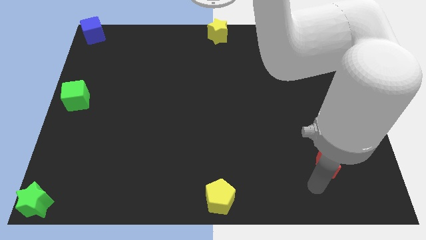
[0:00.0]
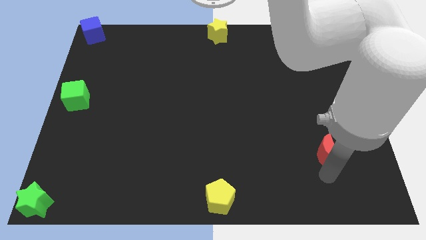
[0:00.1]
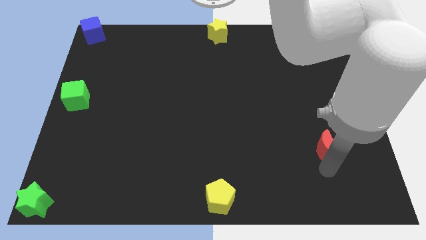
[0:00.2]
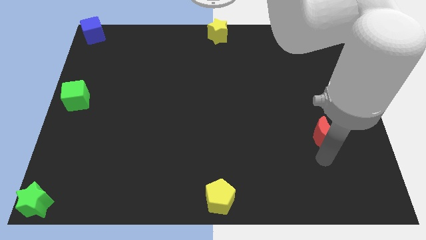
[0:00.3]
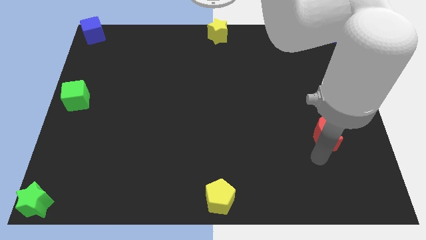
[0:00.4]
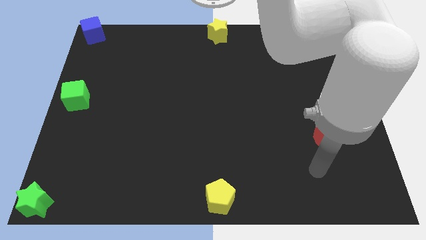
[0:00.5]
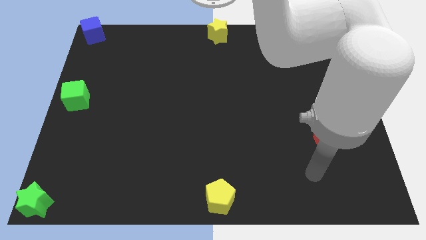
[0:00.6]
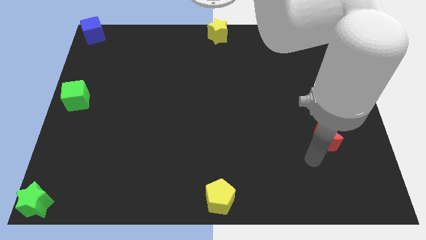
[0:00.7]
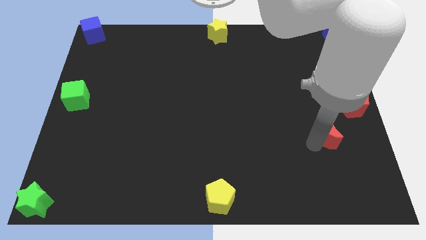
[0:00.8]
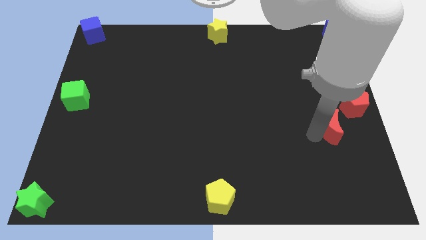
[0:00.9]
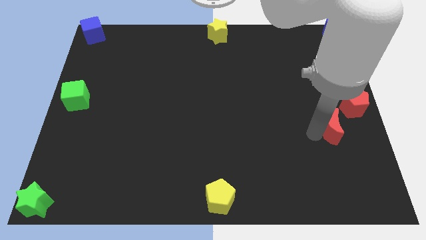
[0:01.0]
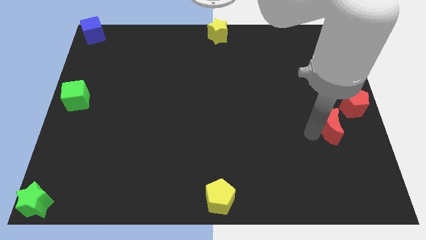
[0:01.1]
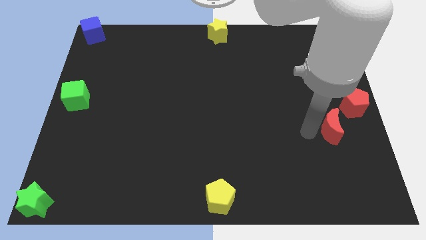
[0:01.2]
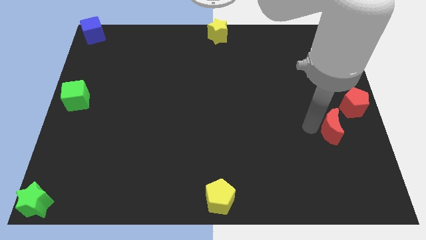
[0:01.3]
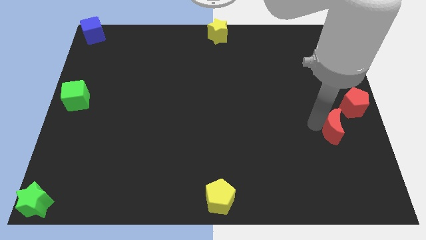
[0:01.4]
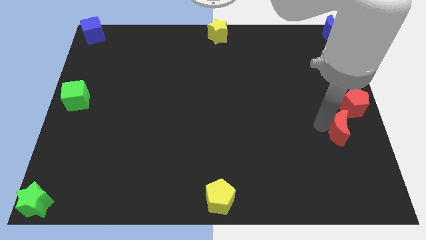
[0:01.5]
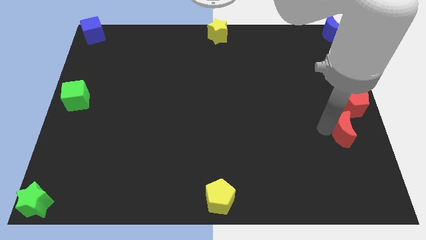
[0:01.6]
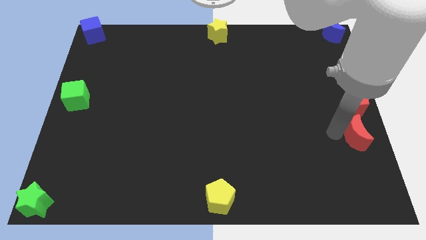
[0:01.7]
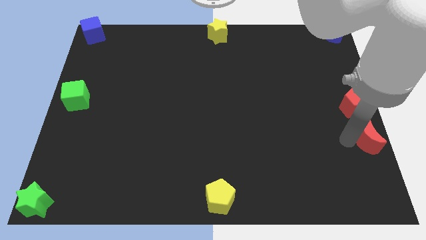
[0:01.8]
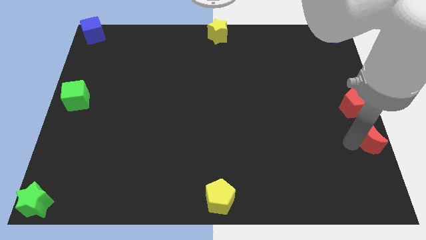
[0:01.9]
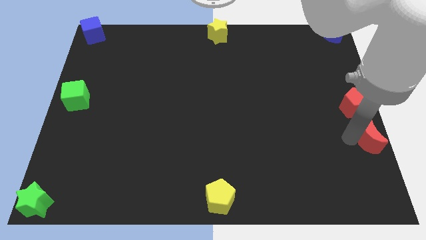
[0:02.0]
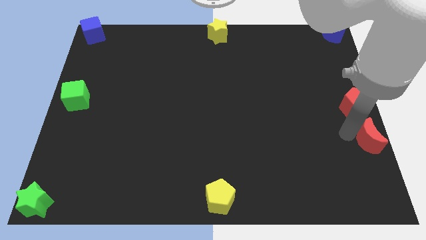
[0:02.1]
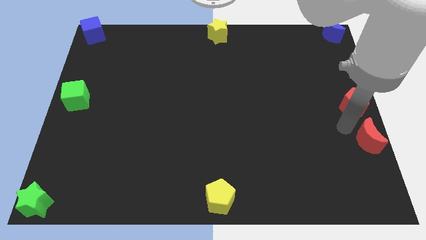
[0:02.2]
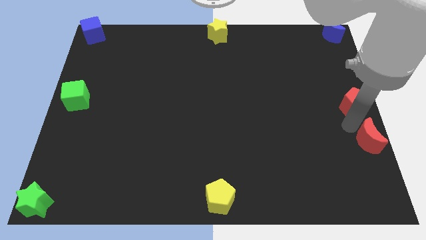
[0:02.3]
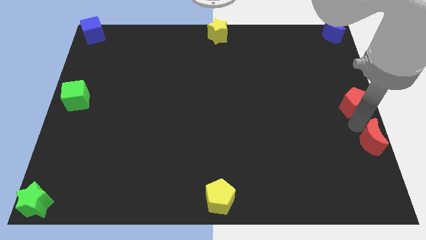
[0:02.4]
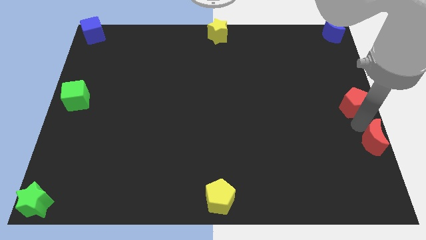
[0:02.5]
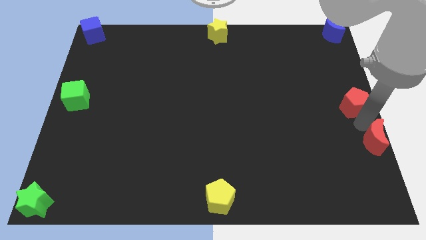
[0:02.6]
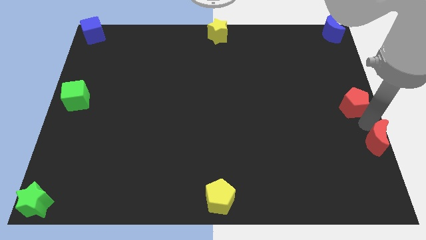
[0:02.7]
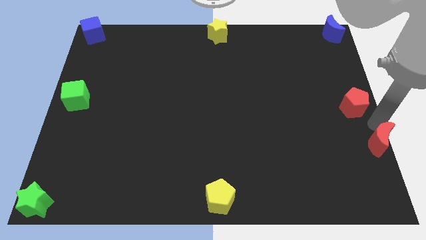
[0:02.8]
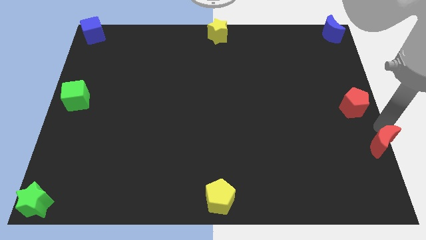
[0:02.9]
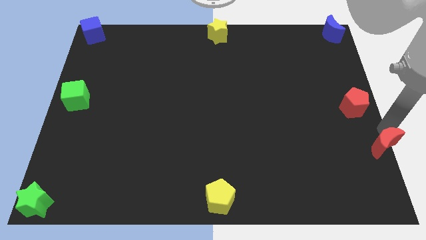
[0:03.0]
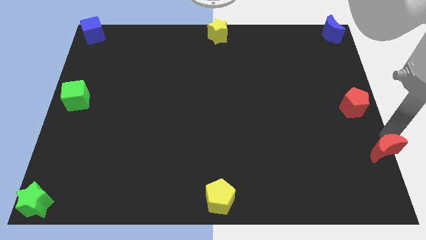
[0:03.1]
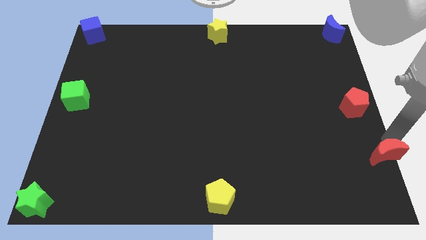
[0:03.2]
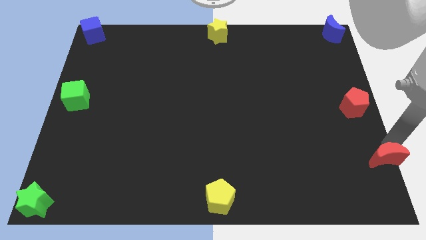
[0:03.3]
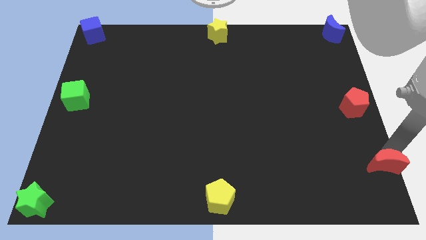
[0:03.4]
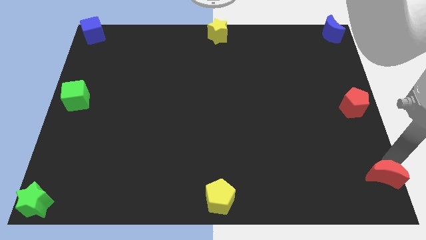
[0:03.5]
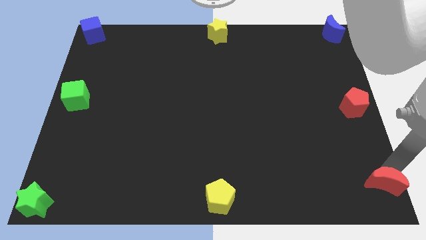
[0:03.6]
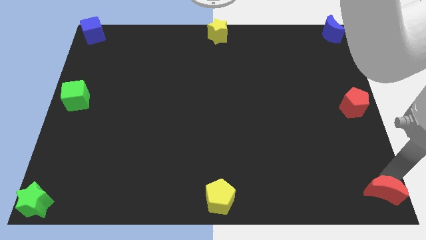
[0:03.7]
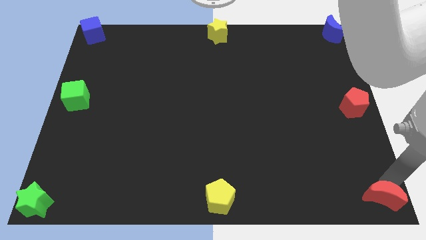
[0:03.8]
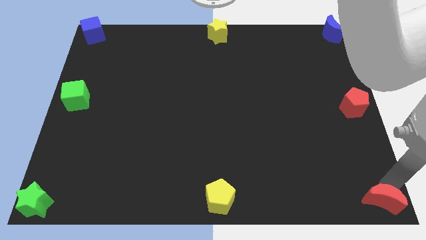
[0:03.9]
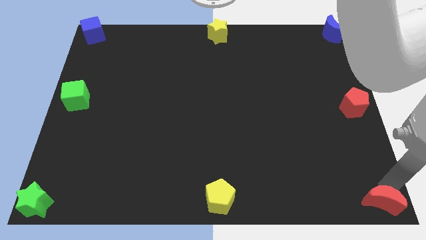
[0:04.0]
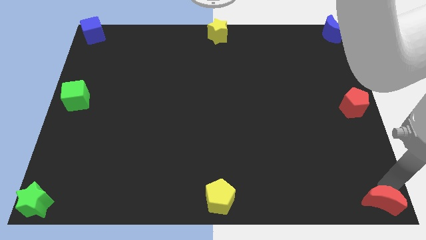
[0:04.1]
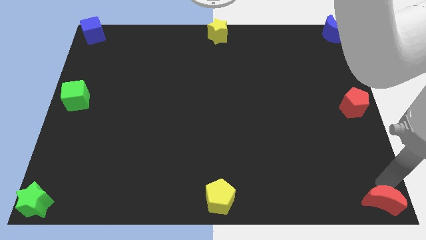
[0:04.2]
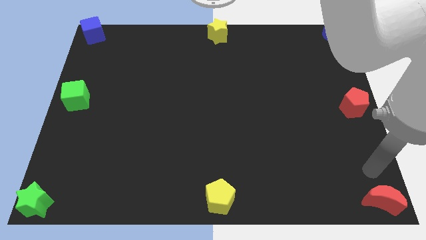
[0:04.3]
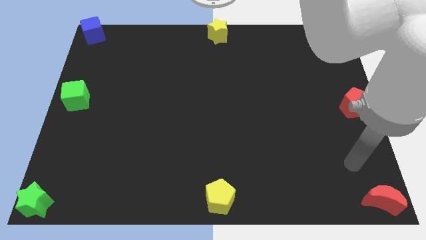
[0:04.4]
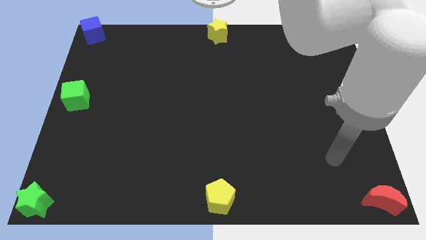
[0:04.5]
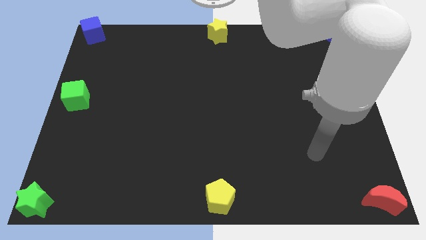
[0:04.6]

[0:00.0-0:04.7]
push the red crescent to the bottom right of the board

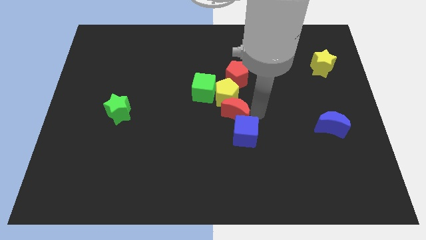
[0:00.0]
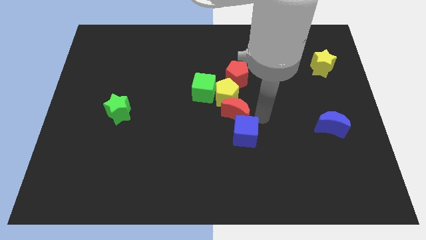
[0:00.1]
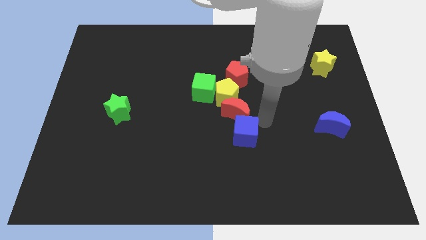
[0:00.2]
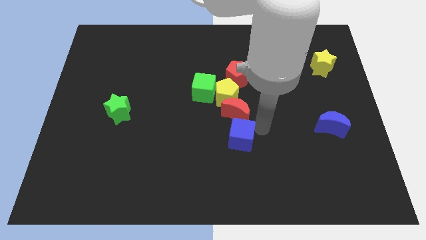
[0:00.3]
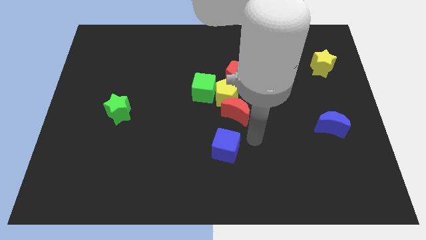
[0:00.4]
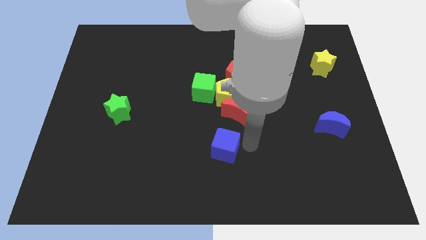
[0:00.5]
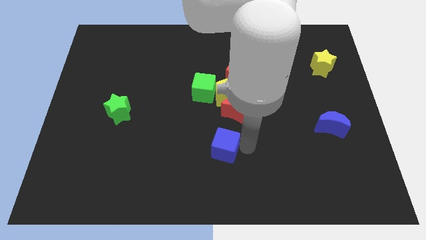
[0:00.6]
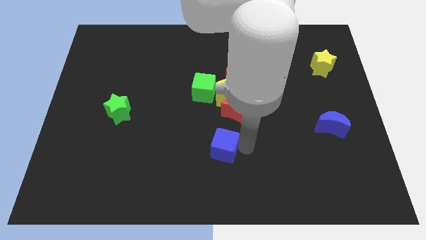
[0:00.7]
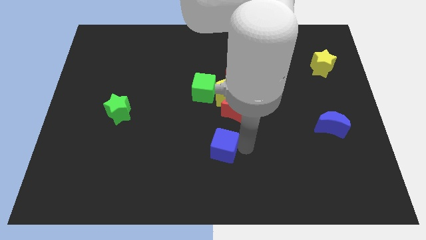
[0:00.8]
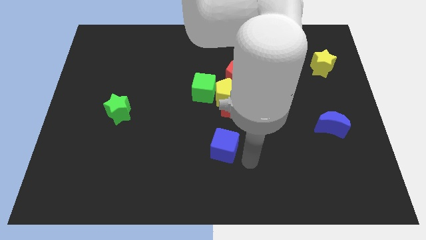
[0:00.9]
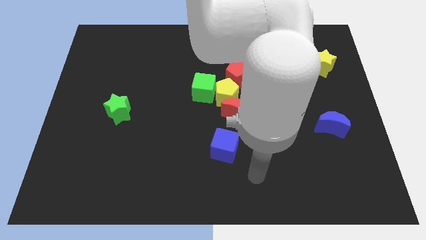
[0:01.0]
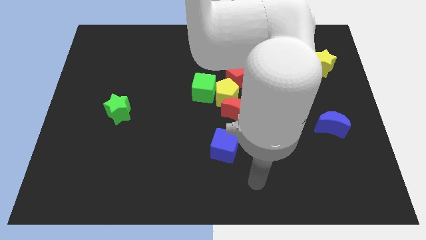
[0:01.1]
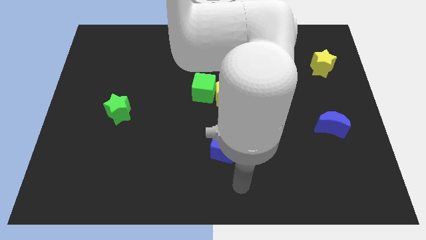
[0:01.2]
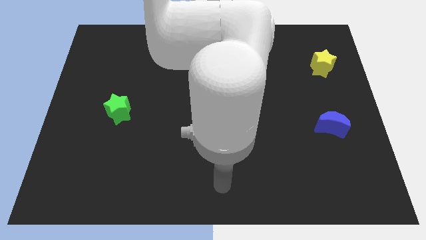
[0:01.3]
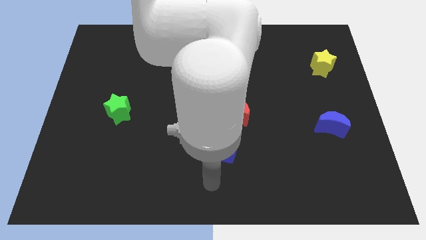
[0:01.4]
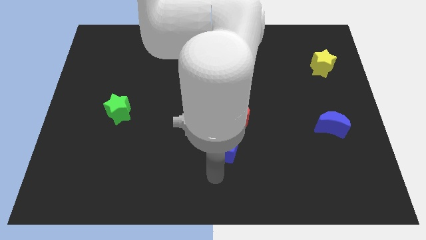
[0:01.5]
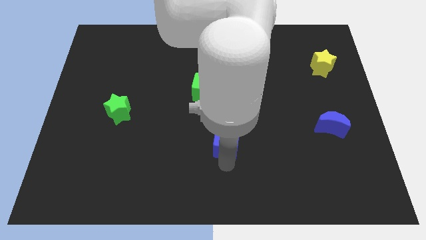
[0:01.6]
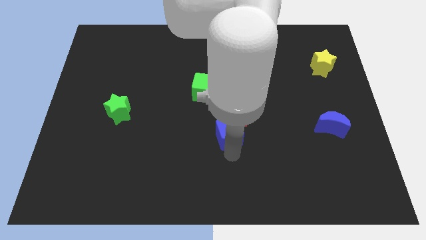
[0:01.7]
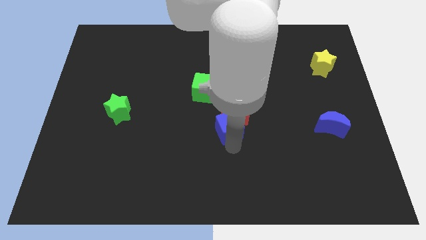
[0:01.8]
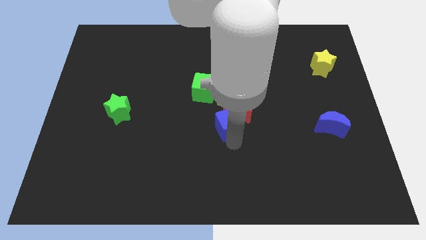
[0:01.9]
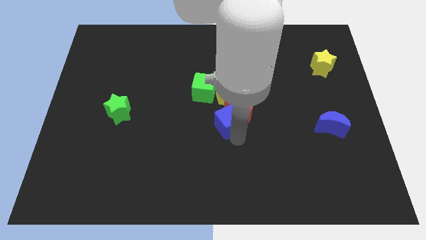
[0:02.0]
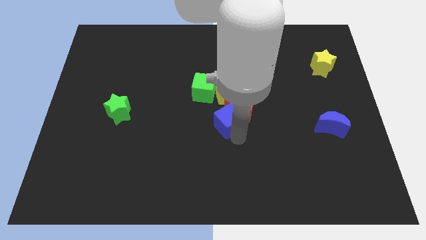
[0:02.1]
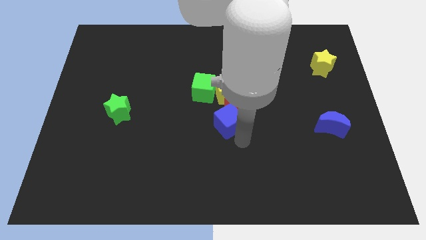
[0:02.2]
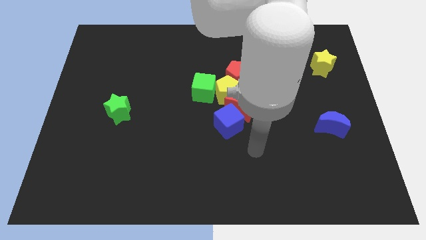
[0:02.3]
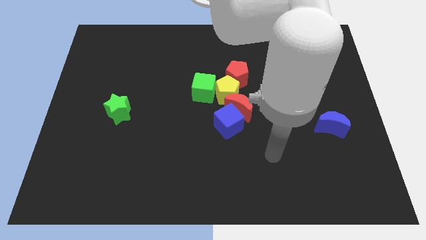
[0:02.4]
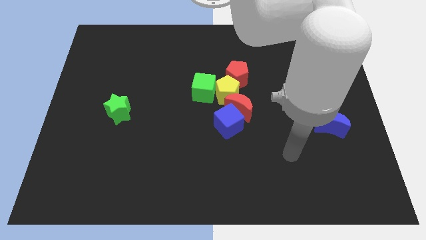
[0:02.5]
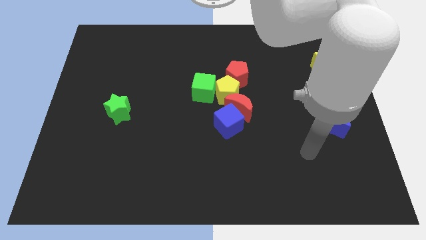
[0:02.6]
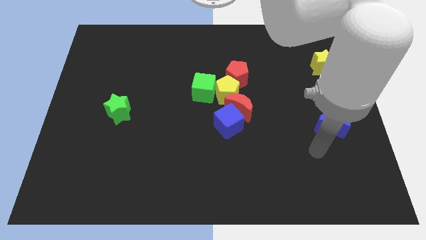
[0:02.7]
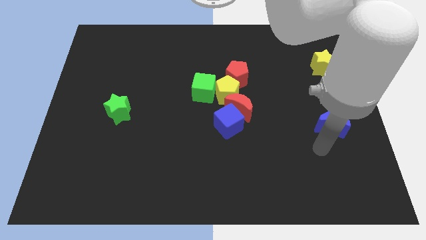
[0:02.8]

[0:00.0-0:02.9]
move the blue cube into the bottom side of the red moon

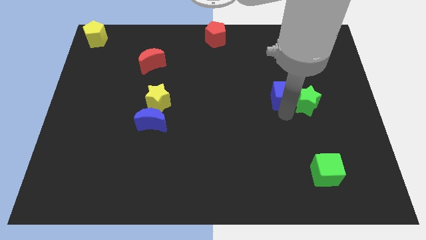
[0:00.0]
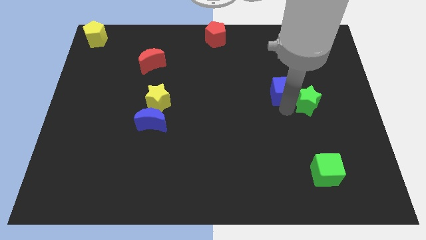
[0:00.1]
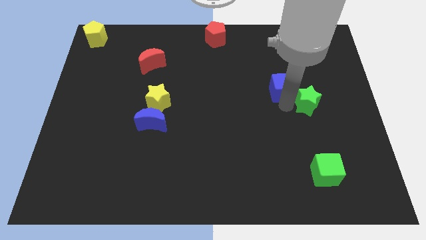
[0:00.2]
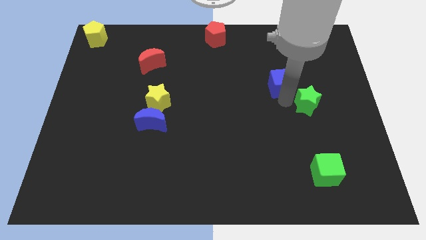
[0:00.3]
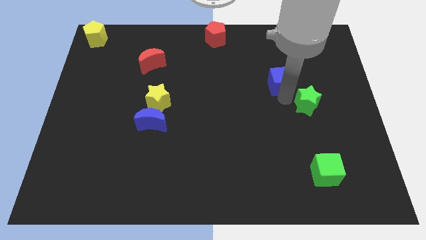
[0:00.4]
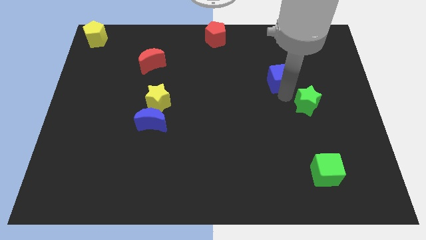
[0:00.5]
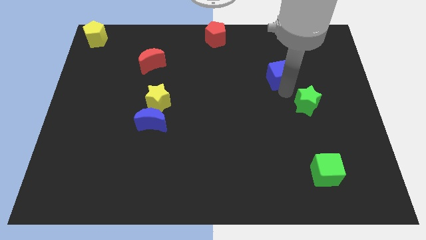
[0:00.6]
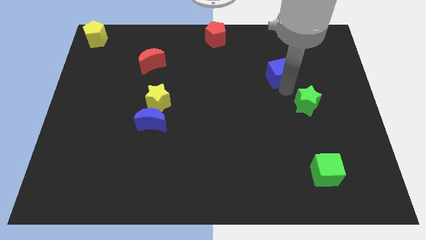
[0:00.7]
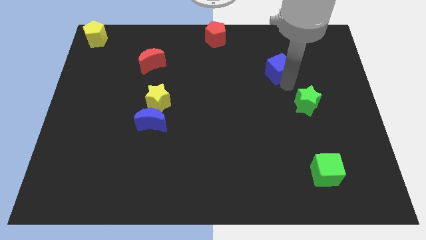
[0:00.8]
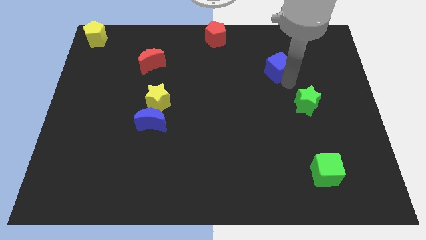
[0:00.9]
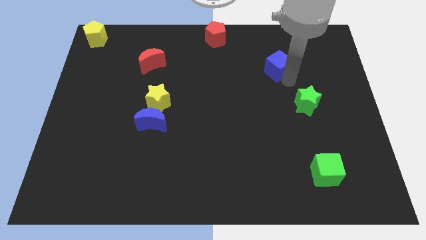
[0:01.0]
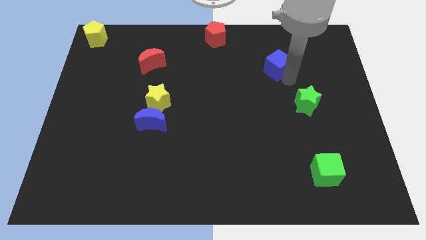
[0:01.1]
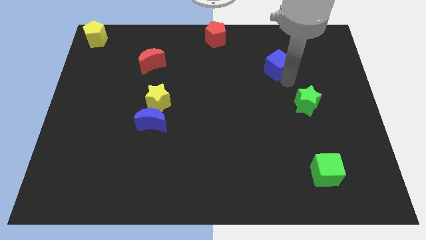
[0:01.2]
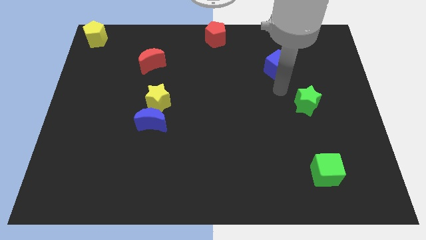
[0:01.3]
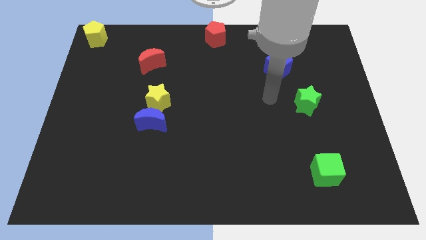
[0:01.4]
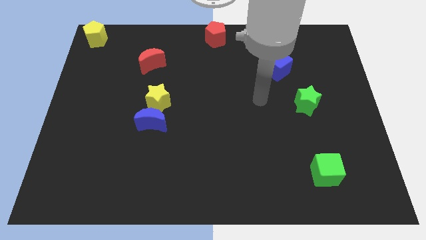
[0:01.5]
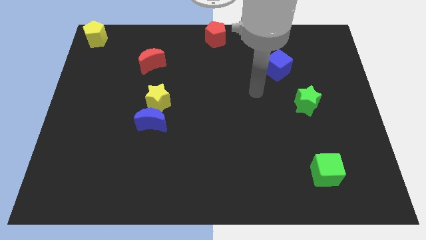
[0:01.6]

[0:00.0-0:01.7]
separate the blue cube from the green star
